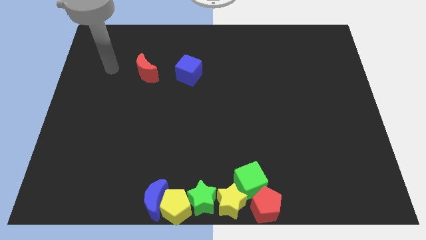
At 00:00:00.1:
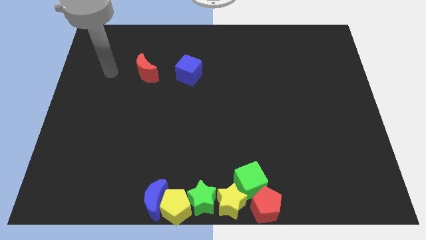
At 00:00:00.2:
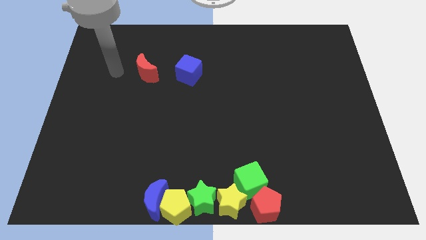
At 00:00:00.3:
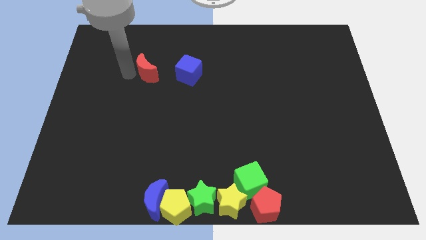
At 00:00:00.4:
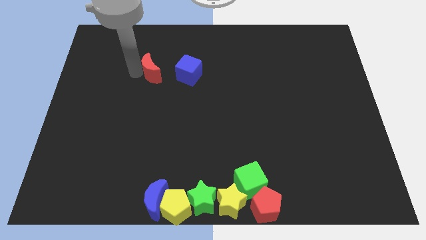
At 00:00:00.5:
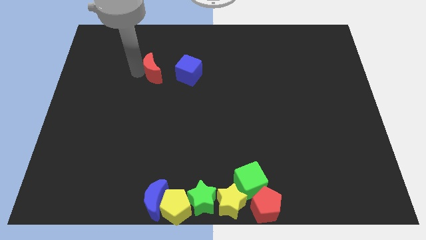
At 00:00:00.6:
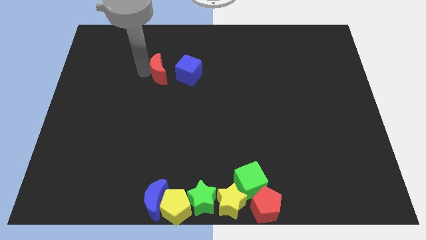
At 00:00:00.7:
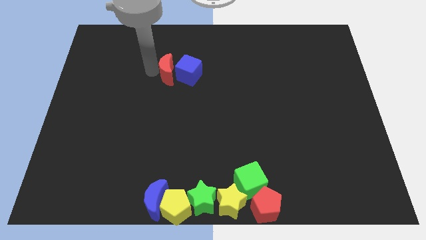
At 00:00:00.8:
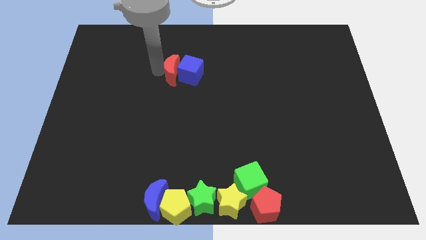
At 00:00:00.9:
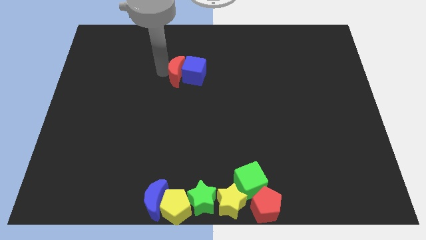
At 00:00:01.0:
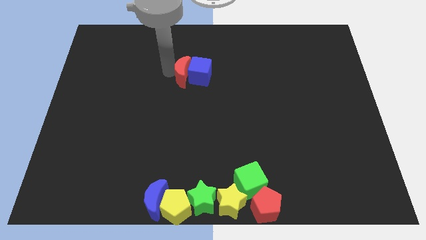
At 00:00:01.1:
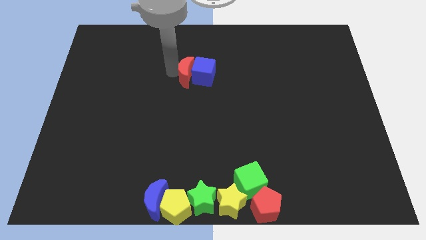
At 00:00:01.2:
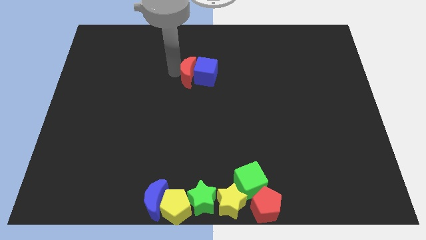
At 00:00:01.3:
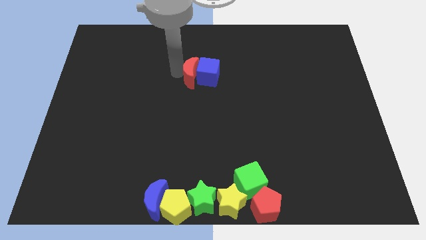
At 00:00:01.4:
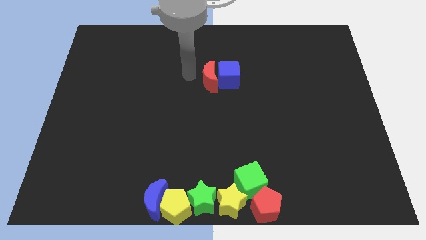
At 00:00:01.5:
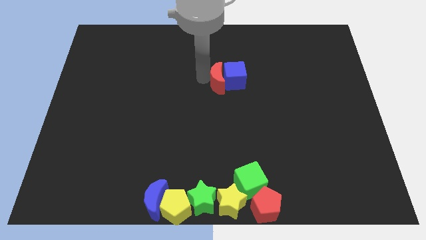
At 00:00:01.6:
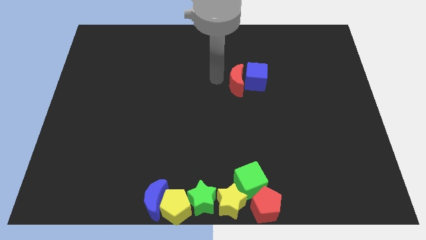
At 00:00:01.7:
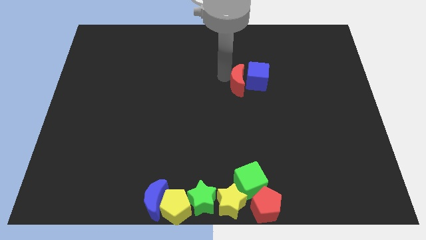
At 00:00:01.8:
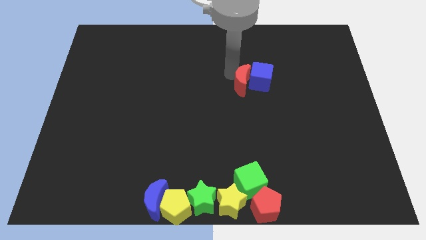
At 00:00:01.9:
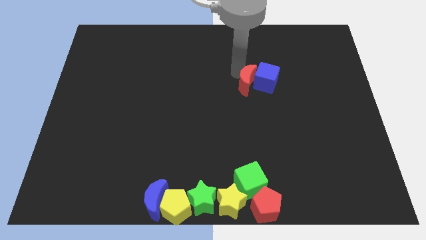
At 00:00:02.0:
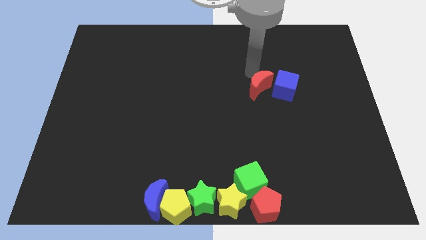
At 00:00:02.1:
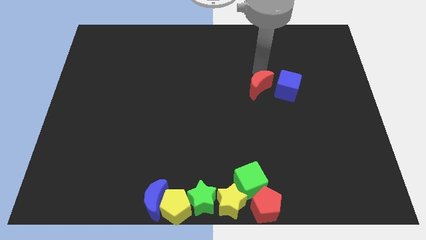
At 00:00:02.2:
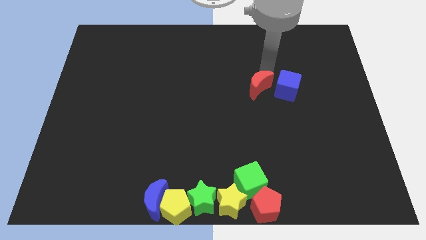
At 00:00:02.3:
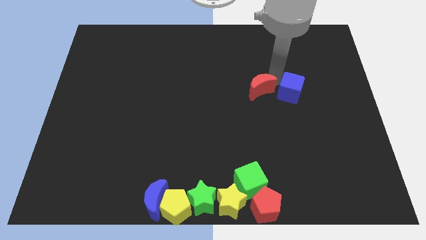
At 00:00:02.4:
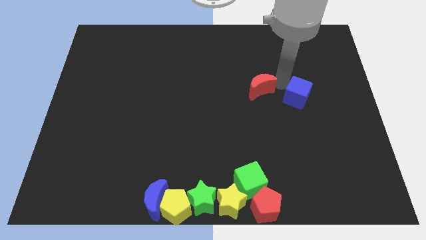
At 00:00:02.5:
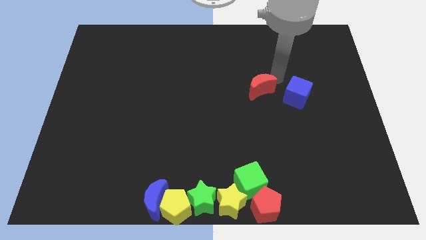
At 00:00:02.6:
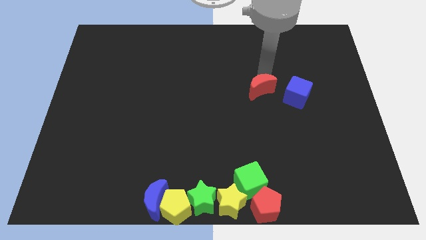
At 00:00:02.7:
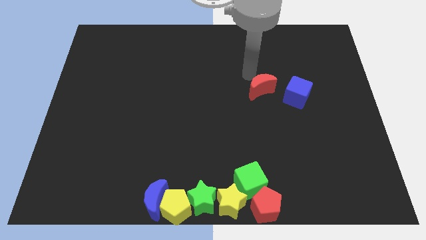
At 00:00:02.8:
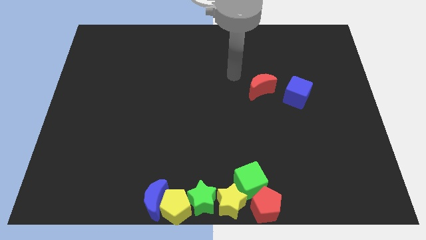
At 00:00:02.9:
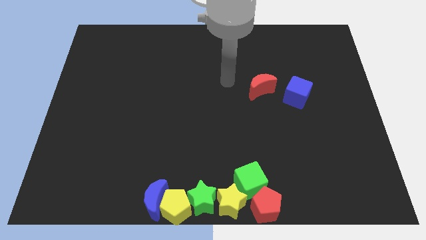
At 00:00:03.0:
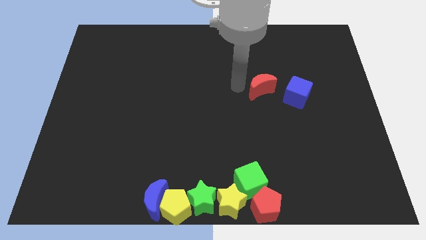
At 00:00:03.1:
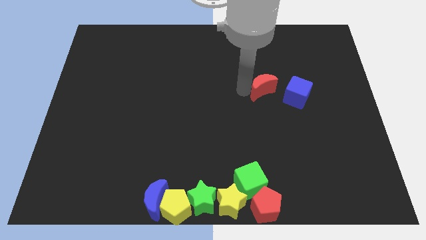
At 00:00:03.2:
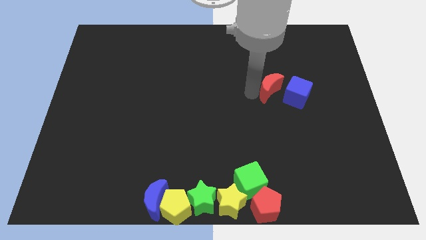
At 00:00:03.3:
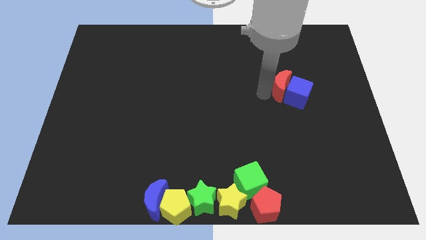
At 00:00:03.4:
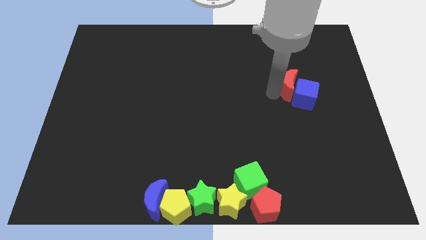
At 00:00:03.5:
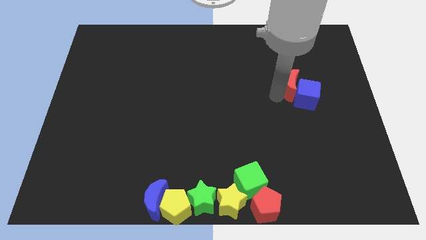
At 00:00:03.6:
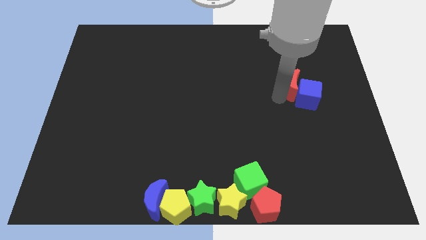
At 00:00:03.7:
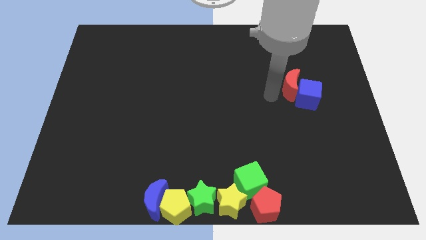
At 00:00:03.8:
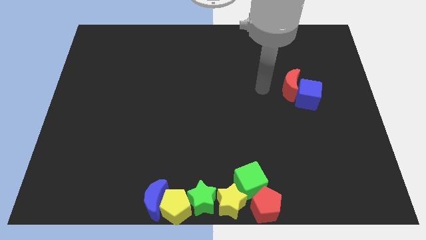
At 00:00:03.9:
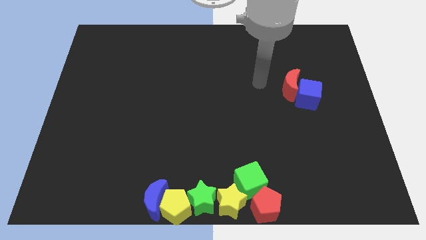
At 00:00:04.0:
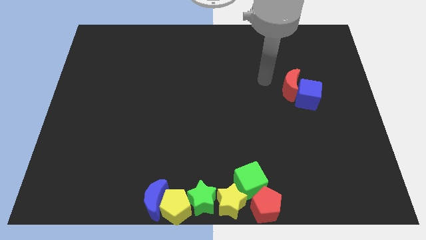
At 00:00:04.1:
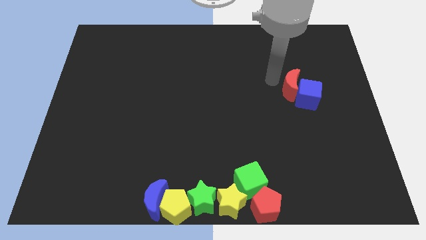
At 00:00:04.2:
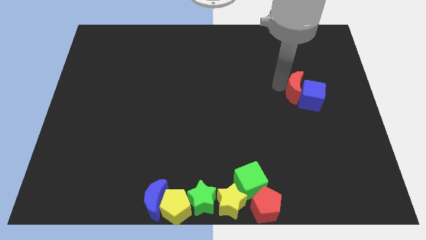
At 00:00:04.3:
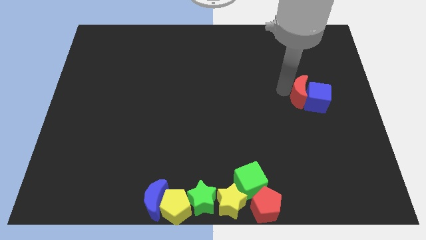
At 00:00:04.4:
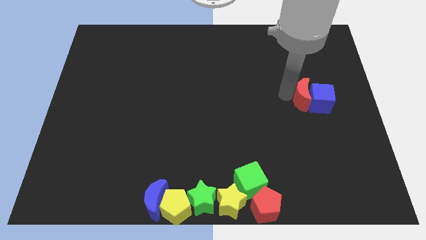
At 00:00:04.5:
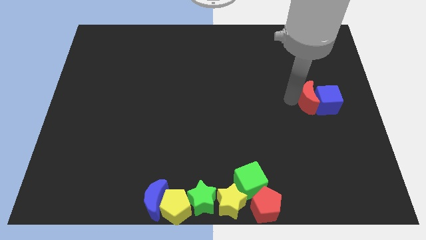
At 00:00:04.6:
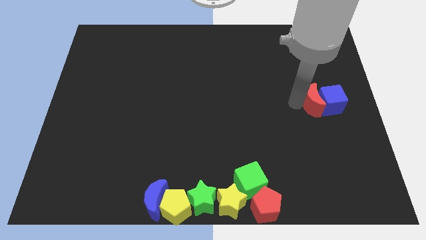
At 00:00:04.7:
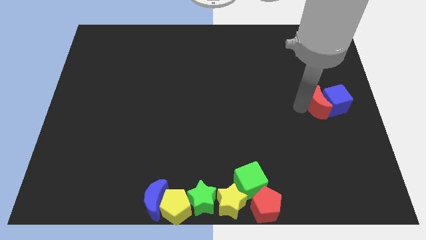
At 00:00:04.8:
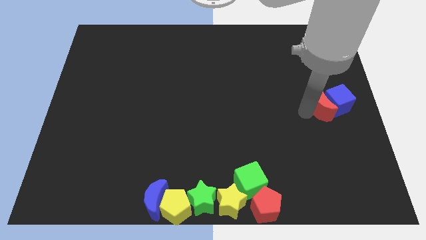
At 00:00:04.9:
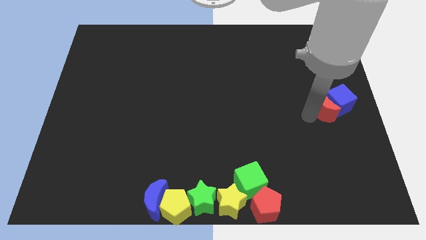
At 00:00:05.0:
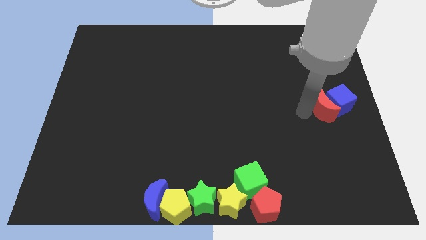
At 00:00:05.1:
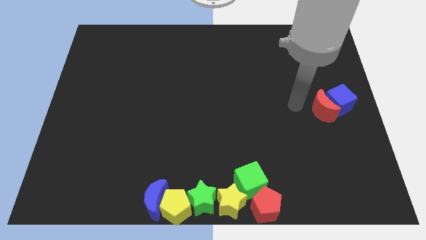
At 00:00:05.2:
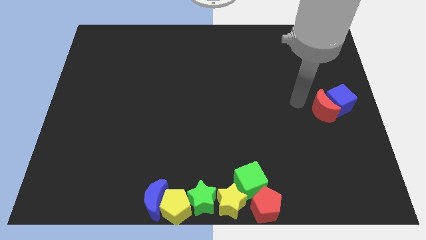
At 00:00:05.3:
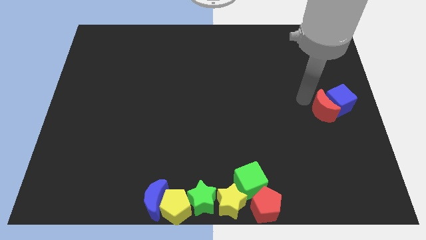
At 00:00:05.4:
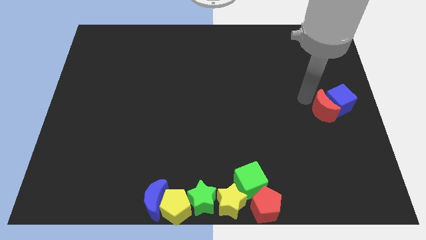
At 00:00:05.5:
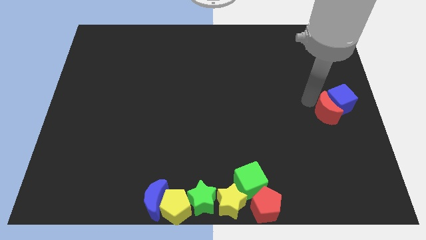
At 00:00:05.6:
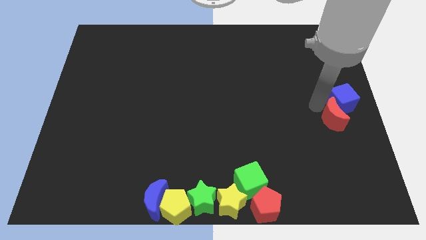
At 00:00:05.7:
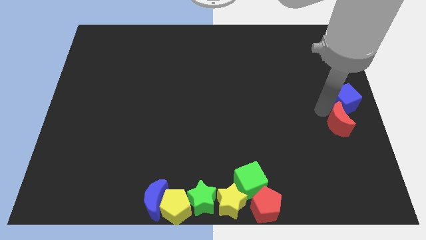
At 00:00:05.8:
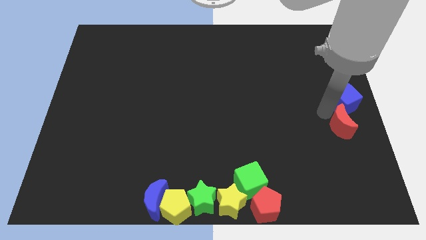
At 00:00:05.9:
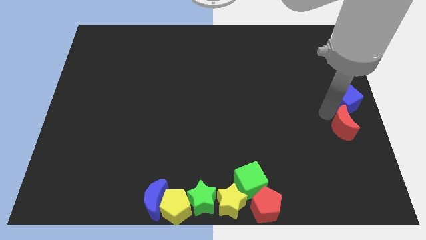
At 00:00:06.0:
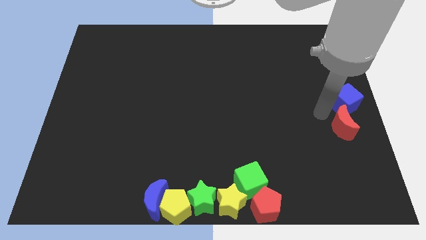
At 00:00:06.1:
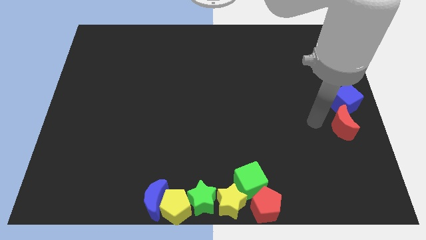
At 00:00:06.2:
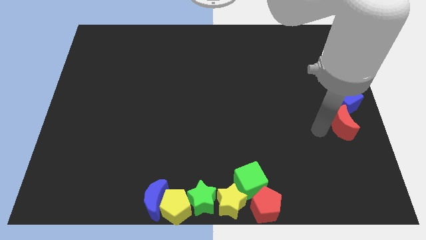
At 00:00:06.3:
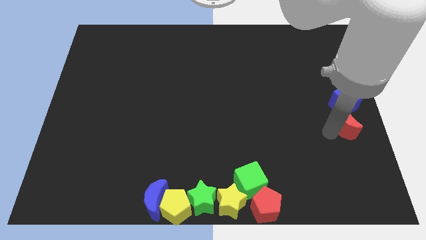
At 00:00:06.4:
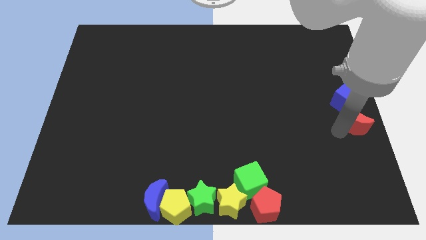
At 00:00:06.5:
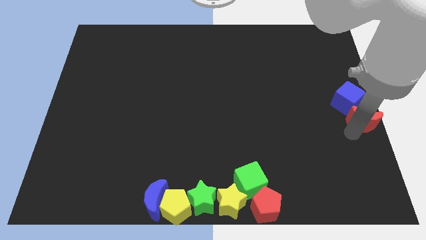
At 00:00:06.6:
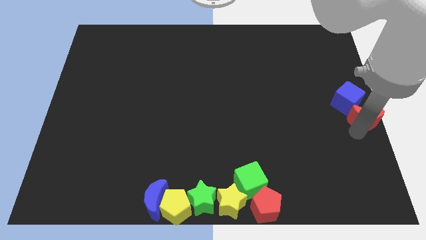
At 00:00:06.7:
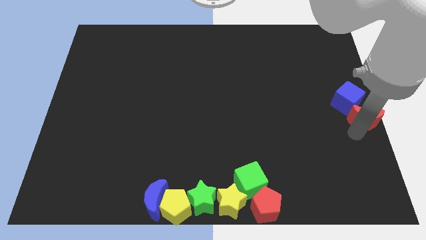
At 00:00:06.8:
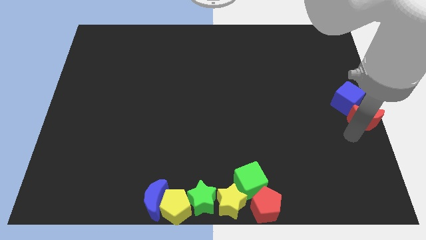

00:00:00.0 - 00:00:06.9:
move the blue cube with the red crescent towards the right center of the board

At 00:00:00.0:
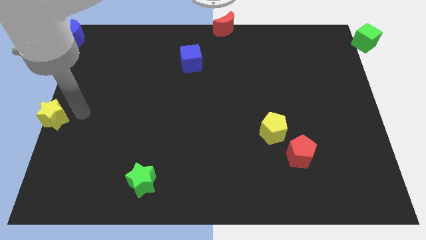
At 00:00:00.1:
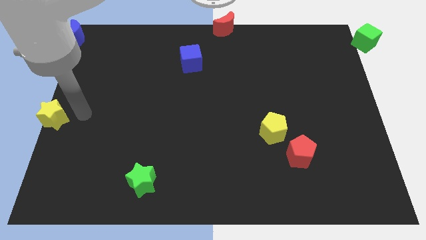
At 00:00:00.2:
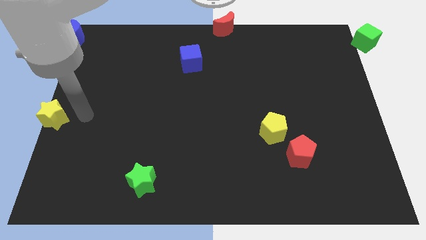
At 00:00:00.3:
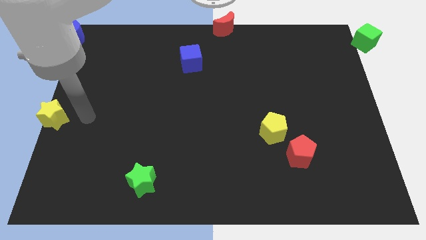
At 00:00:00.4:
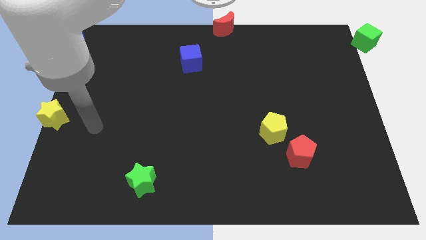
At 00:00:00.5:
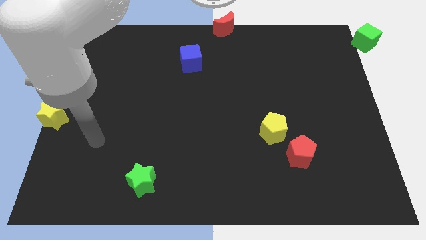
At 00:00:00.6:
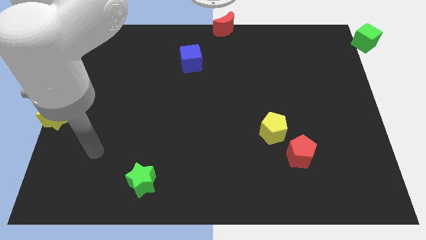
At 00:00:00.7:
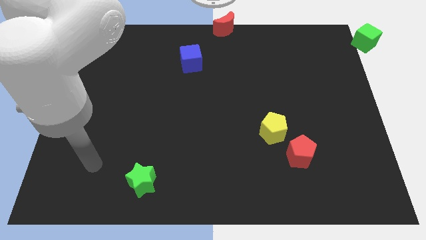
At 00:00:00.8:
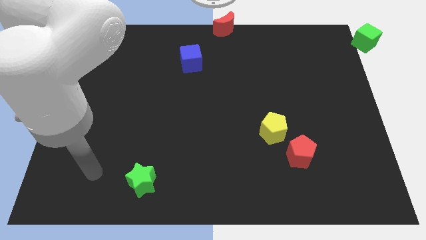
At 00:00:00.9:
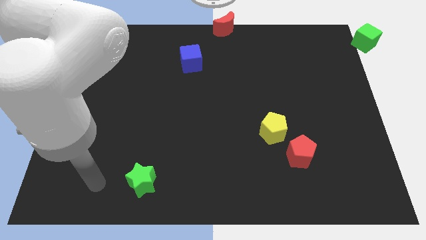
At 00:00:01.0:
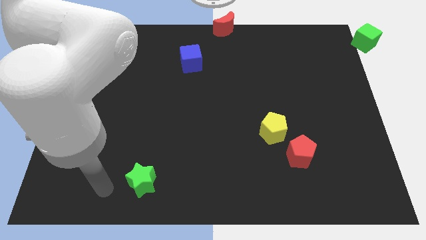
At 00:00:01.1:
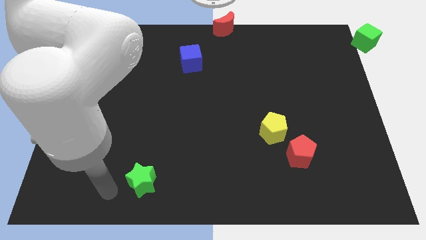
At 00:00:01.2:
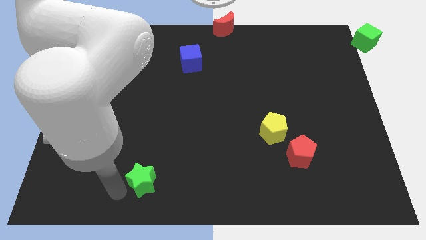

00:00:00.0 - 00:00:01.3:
go away from the yellow star

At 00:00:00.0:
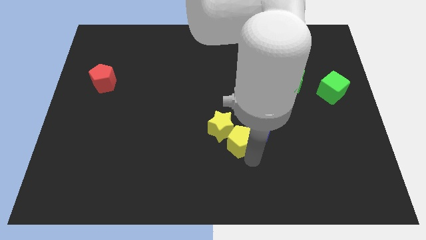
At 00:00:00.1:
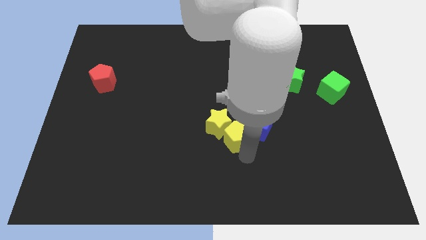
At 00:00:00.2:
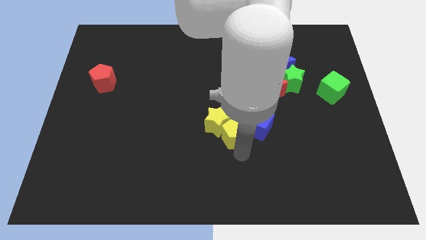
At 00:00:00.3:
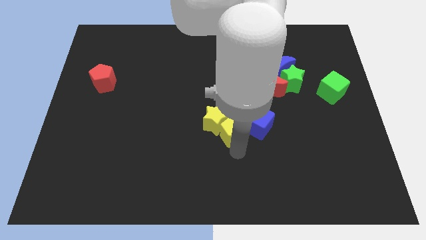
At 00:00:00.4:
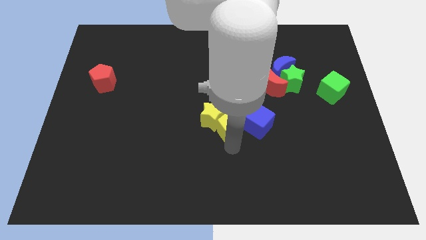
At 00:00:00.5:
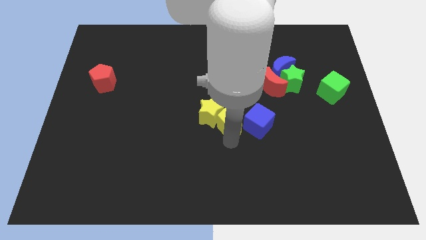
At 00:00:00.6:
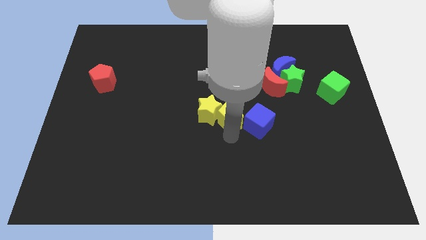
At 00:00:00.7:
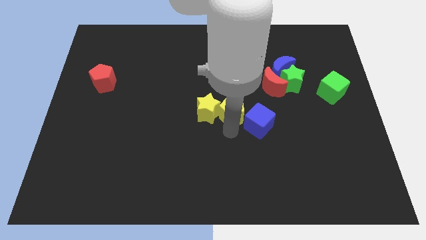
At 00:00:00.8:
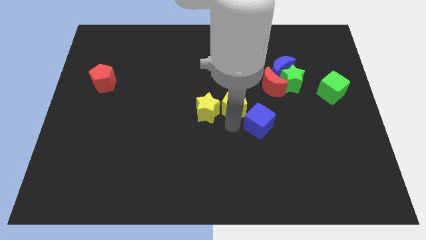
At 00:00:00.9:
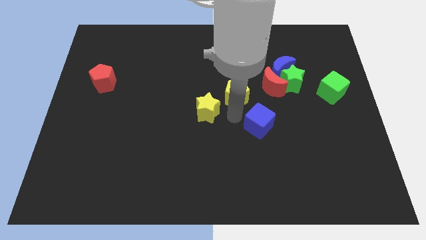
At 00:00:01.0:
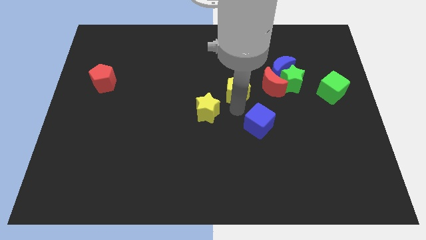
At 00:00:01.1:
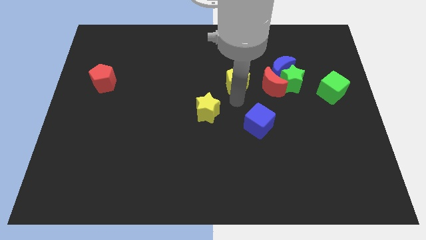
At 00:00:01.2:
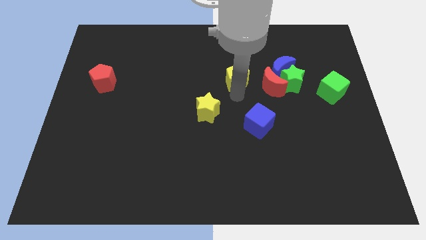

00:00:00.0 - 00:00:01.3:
move the yellow pentagon diagonal to the left side of the red crescent
